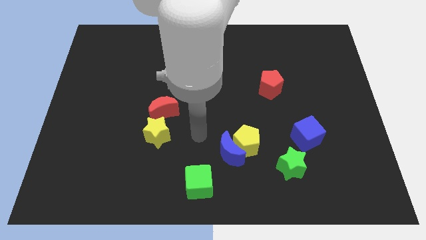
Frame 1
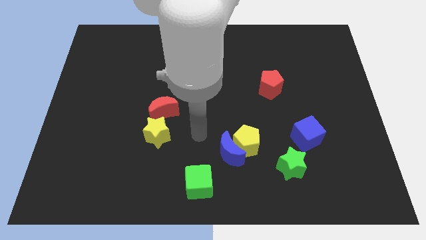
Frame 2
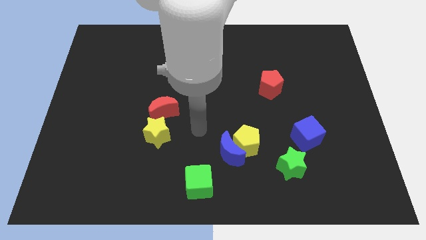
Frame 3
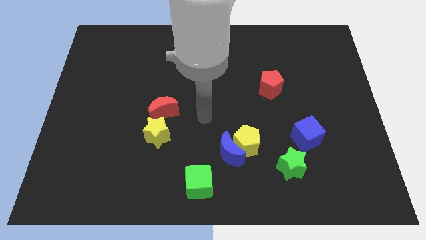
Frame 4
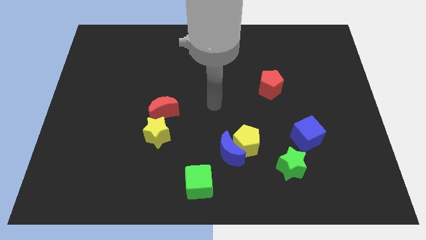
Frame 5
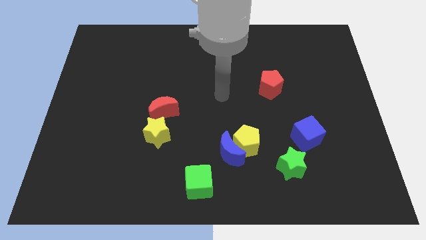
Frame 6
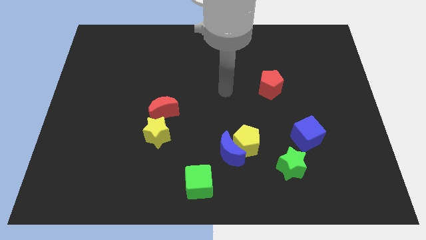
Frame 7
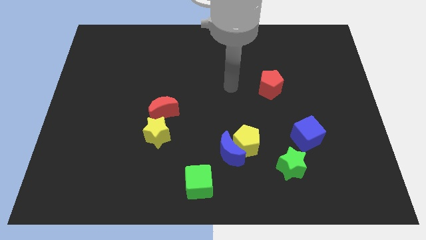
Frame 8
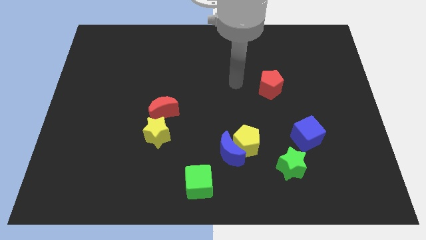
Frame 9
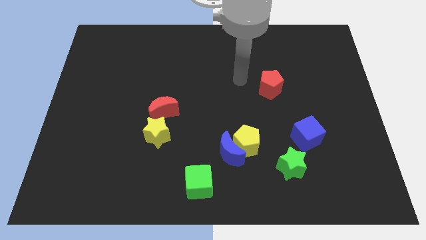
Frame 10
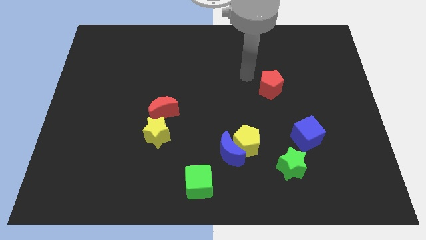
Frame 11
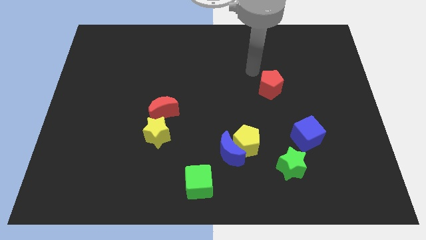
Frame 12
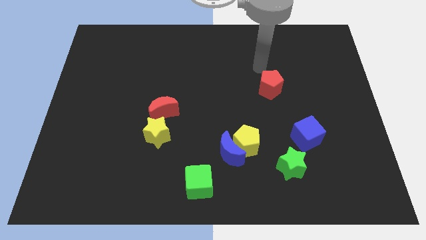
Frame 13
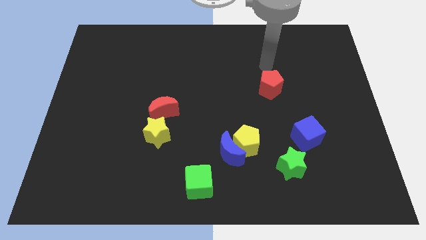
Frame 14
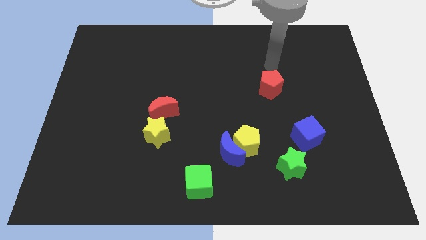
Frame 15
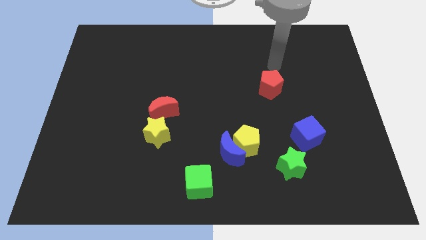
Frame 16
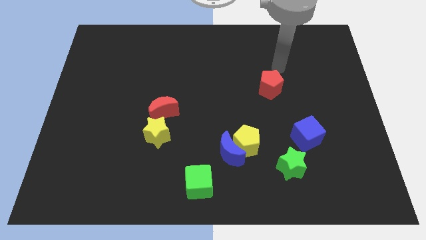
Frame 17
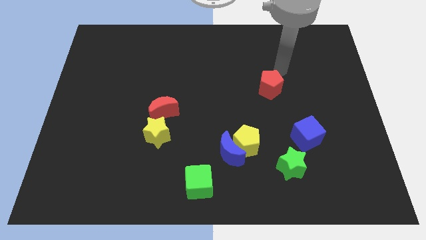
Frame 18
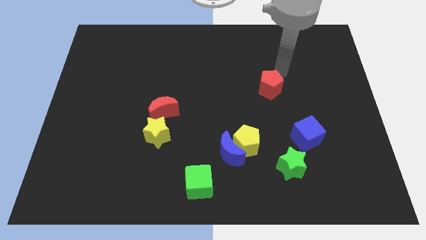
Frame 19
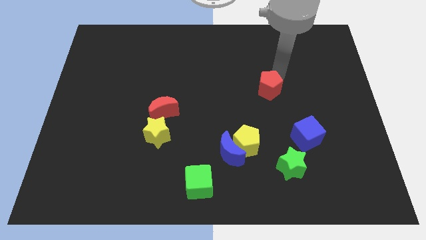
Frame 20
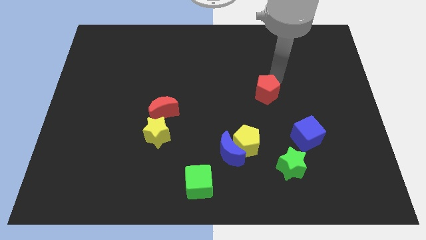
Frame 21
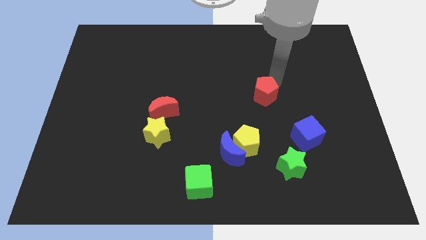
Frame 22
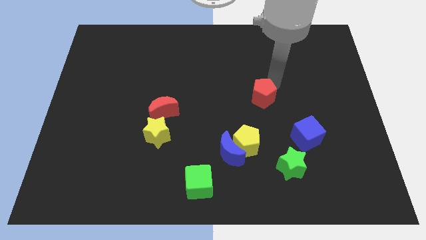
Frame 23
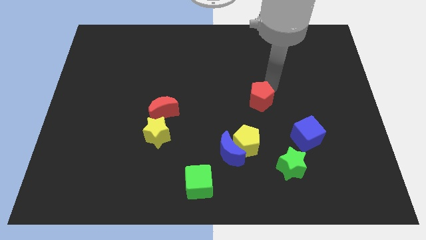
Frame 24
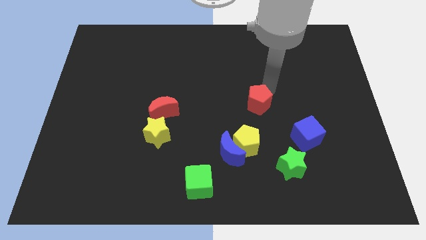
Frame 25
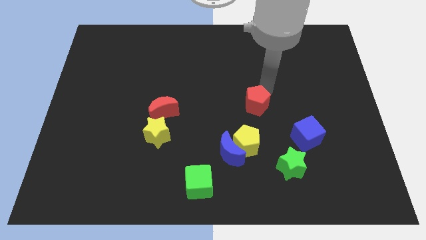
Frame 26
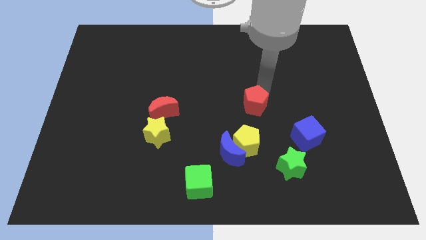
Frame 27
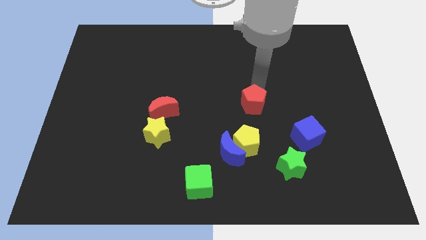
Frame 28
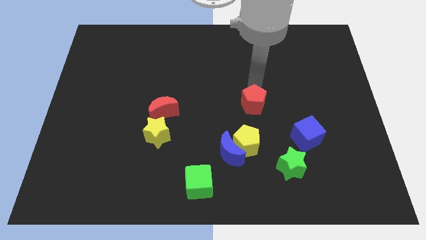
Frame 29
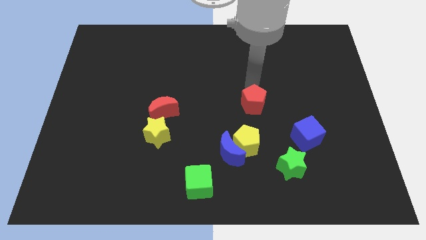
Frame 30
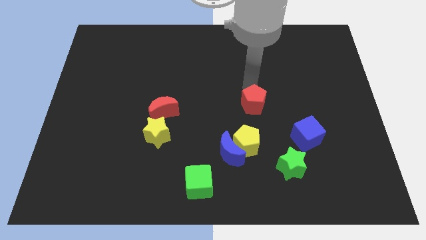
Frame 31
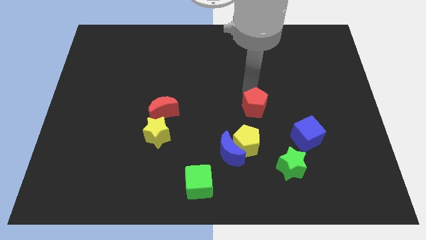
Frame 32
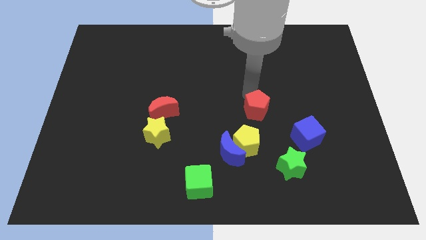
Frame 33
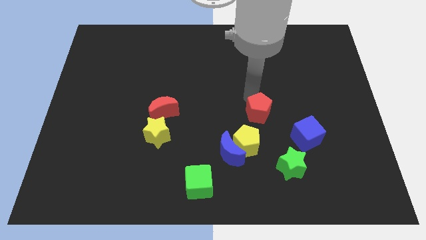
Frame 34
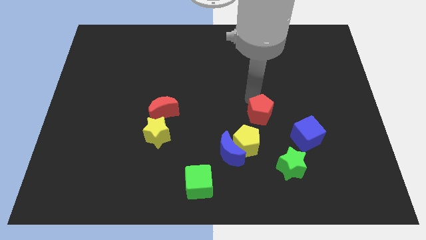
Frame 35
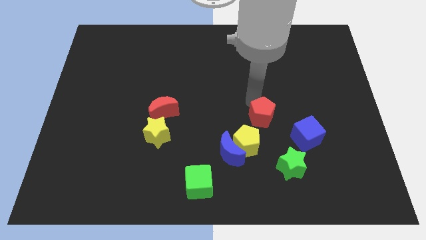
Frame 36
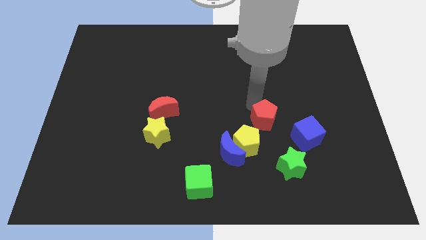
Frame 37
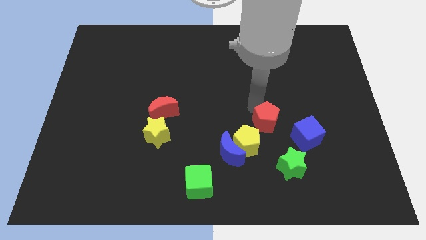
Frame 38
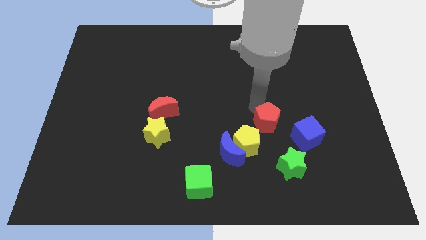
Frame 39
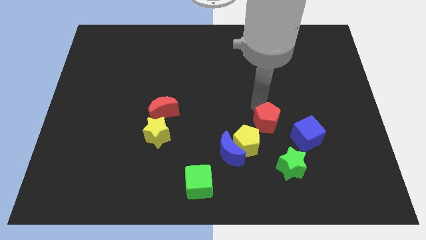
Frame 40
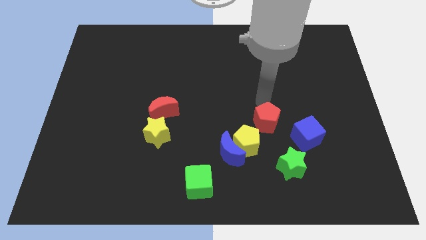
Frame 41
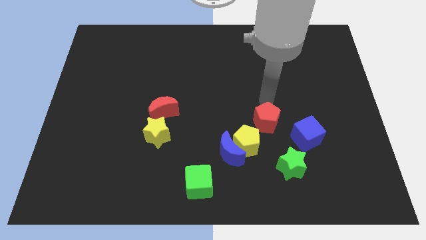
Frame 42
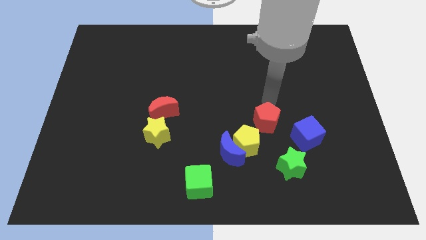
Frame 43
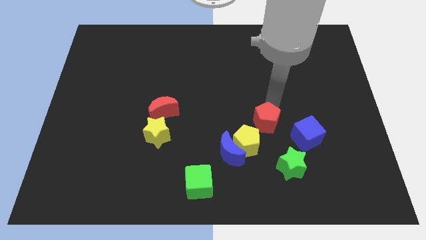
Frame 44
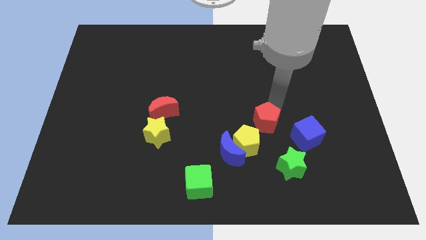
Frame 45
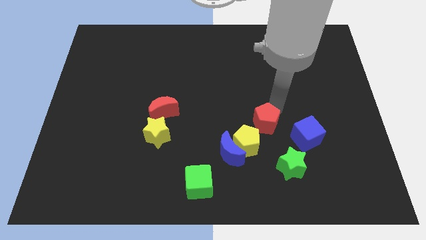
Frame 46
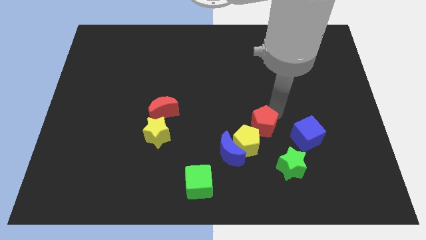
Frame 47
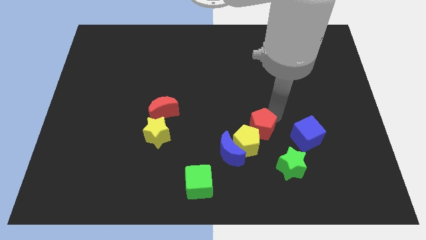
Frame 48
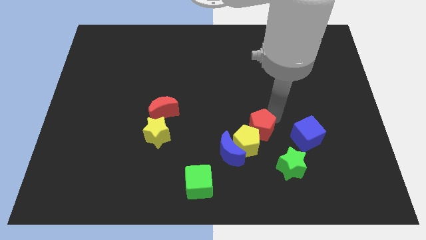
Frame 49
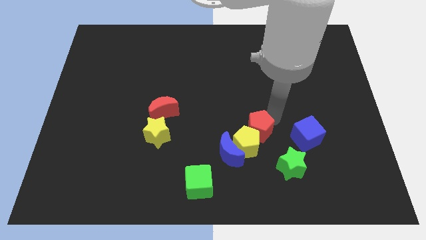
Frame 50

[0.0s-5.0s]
slide the red pentagon close to the yellow pentagon

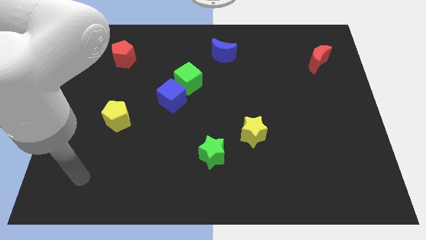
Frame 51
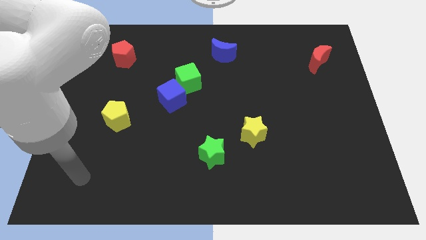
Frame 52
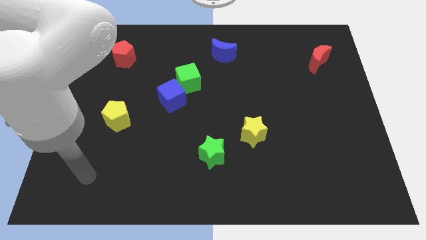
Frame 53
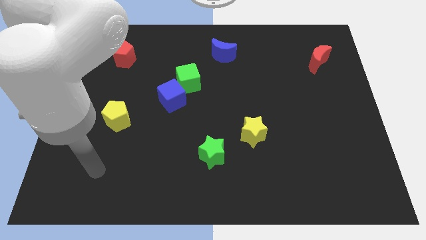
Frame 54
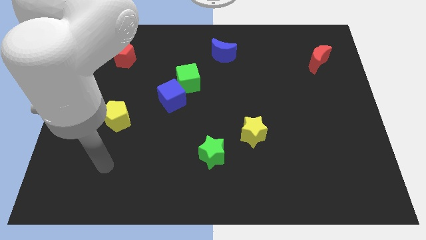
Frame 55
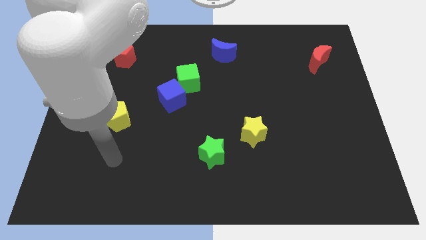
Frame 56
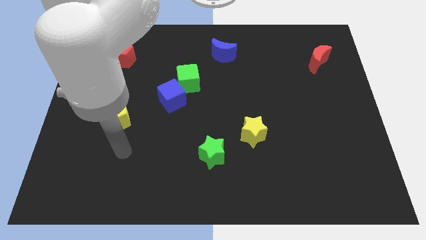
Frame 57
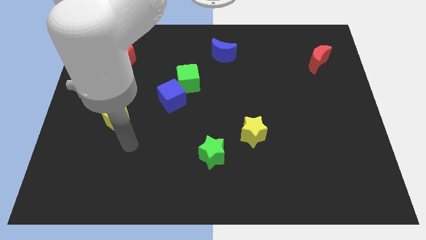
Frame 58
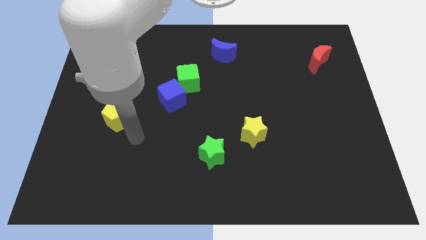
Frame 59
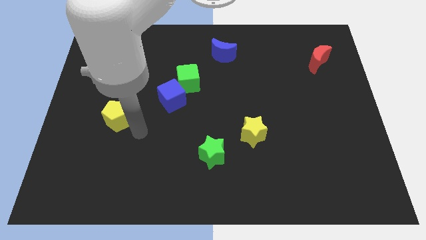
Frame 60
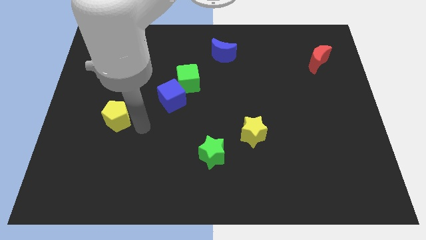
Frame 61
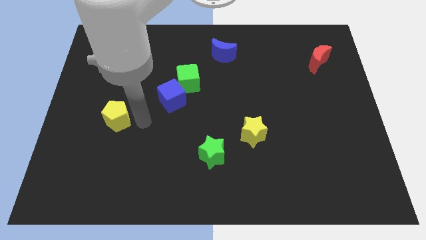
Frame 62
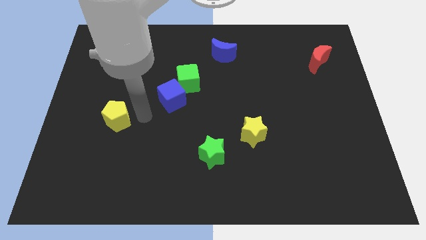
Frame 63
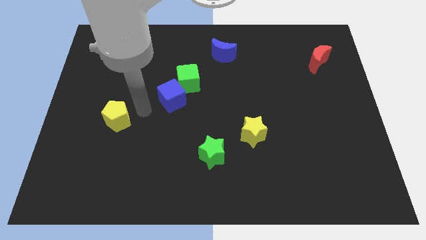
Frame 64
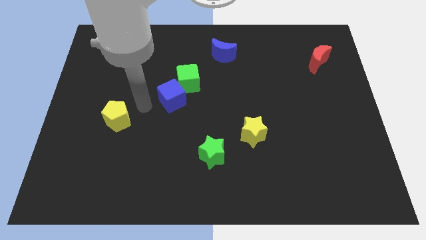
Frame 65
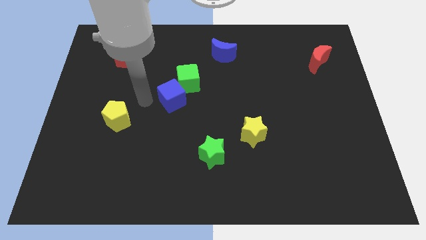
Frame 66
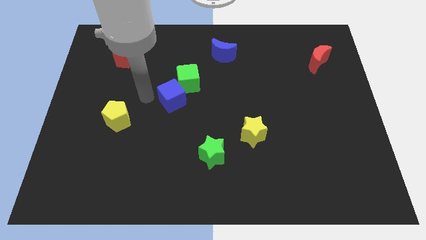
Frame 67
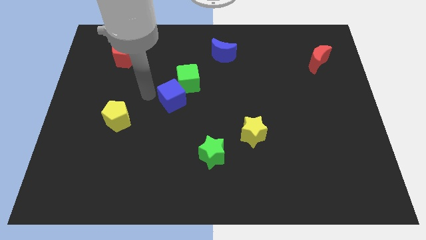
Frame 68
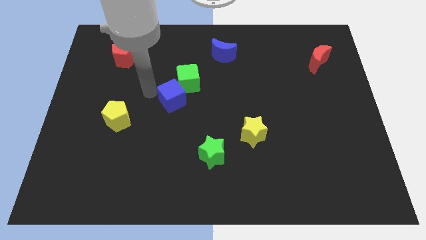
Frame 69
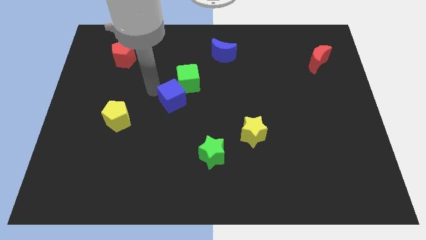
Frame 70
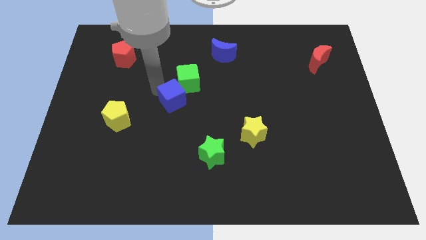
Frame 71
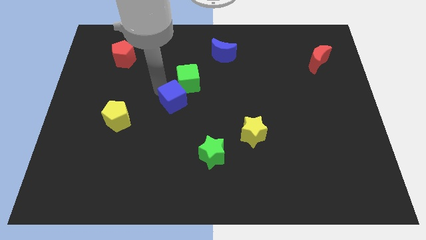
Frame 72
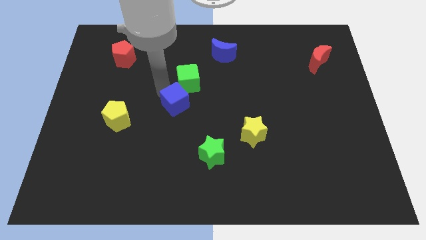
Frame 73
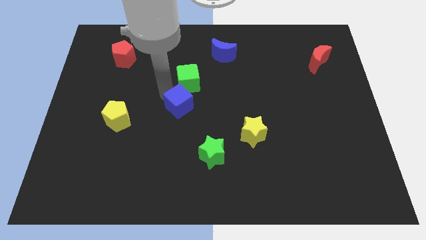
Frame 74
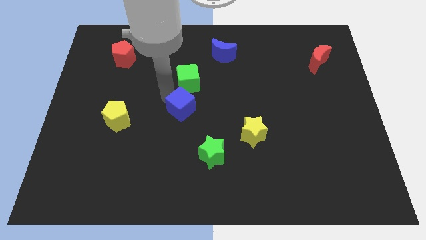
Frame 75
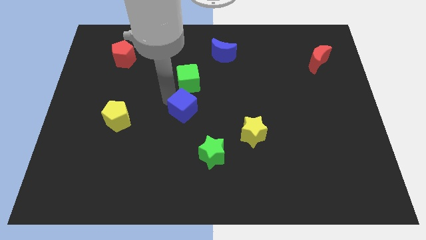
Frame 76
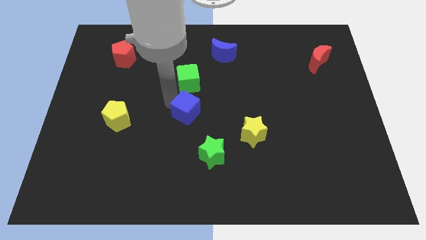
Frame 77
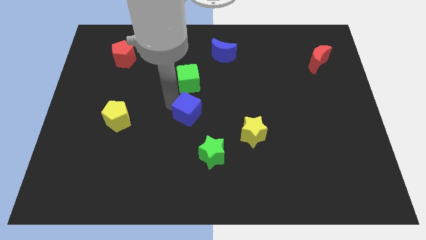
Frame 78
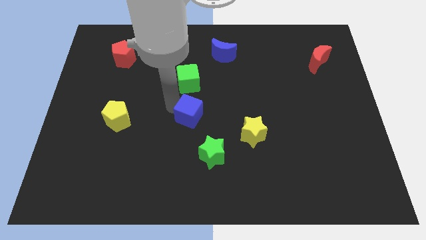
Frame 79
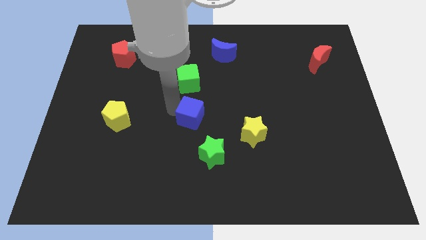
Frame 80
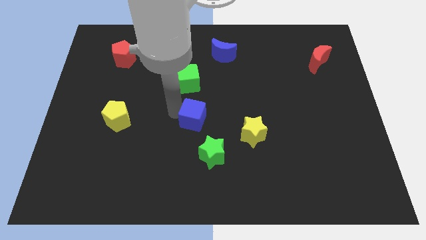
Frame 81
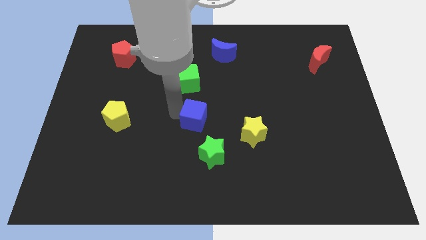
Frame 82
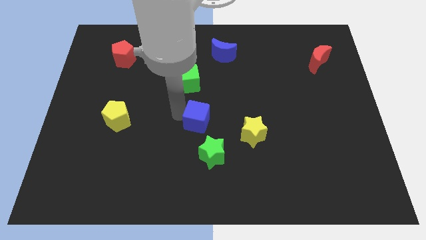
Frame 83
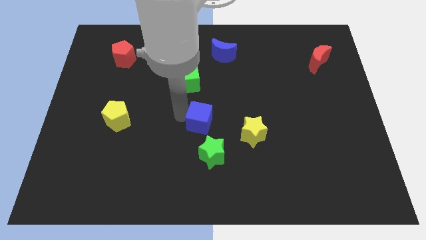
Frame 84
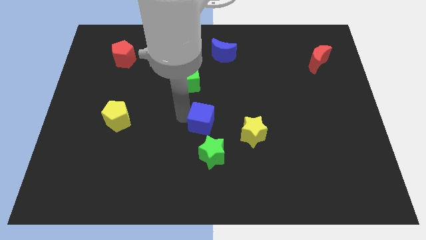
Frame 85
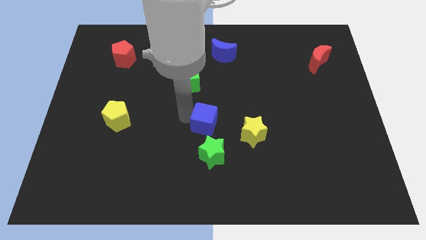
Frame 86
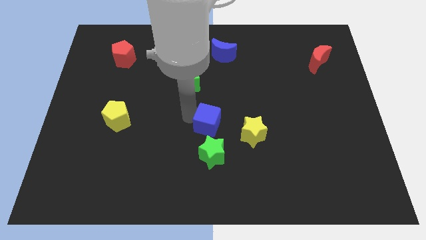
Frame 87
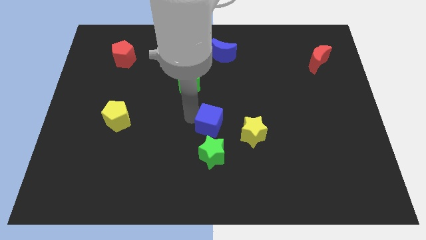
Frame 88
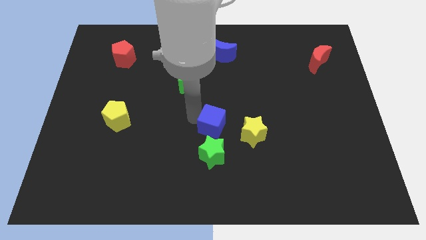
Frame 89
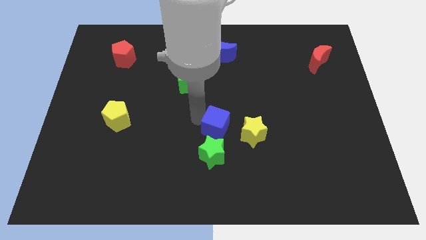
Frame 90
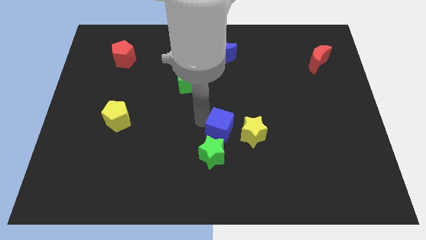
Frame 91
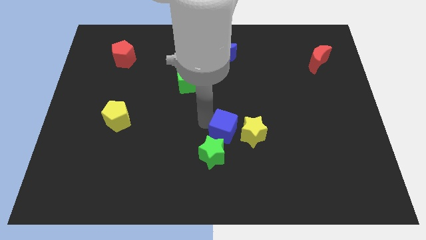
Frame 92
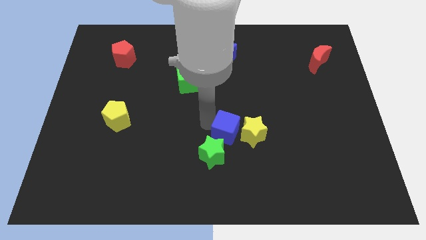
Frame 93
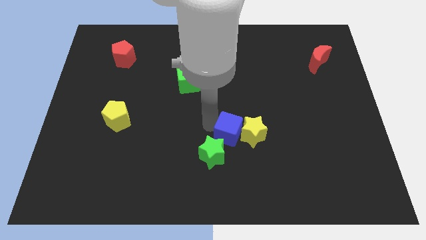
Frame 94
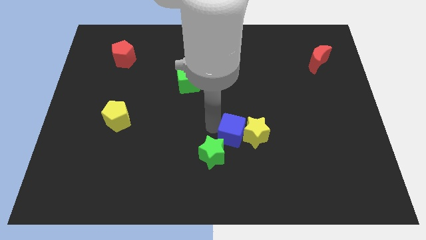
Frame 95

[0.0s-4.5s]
slide the blue cube towards the yellow star
